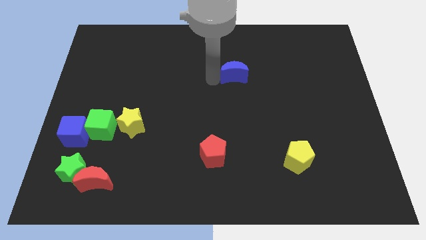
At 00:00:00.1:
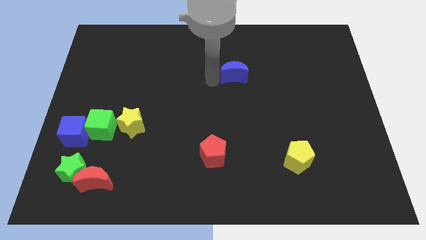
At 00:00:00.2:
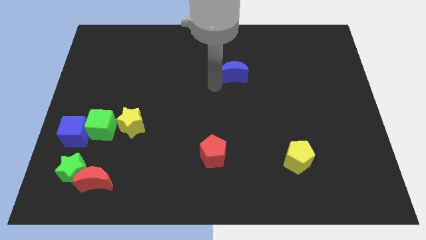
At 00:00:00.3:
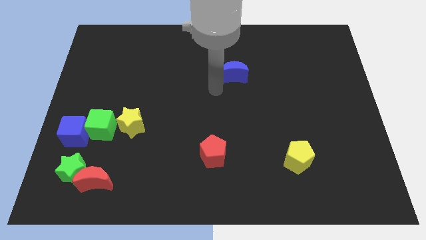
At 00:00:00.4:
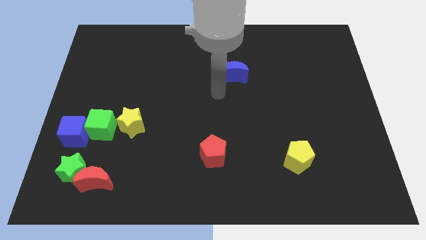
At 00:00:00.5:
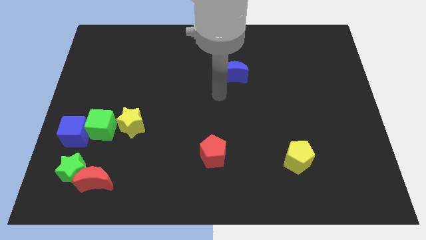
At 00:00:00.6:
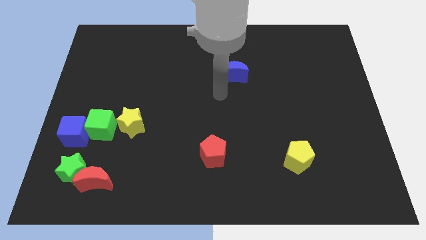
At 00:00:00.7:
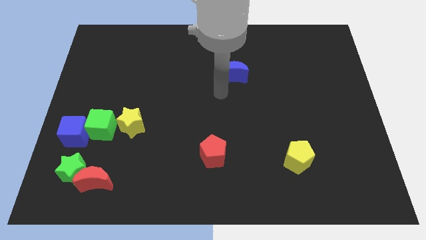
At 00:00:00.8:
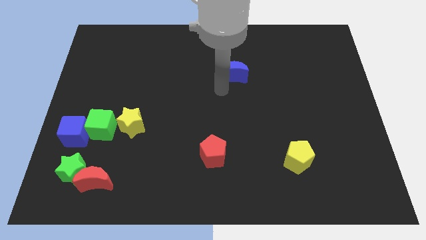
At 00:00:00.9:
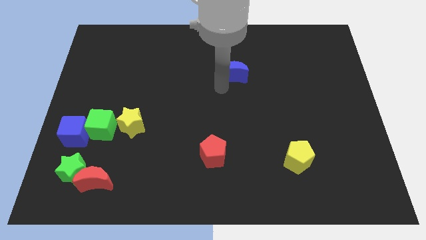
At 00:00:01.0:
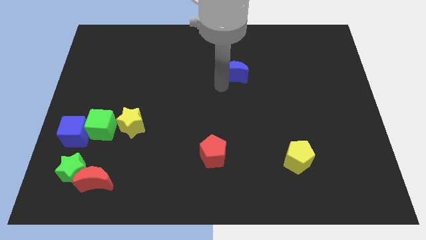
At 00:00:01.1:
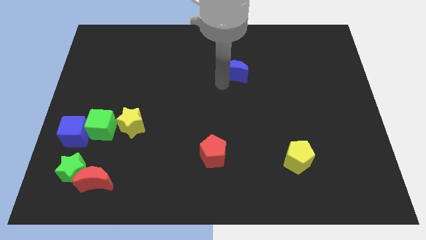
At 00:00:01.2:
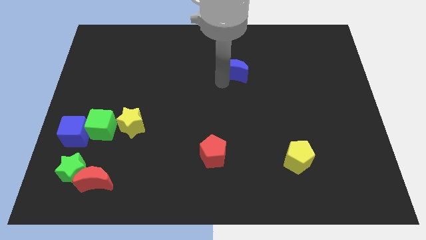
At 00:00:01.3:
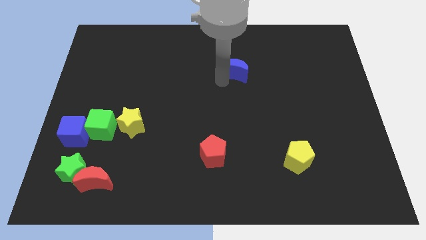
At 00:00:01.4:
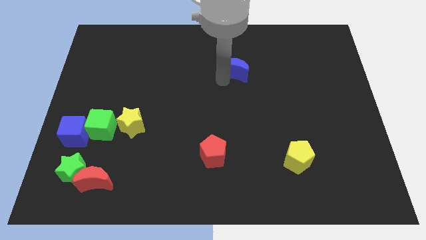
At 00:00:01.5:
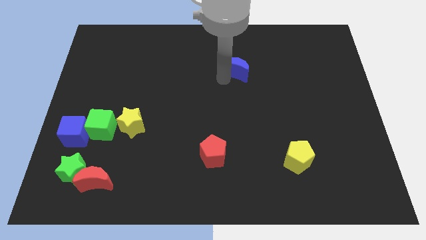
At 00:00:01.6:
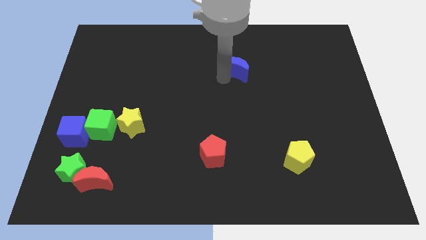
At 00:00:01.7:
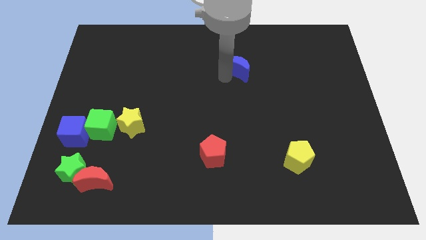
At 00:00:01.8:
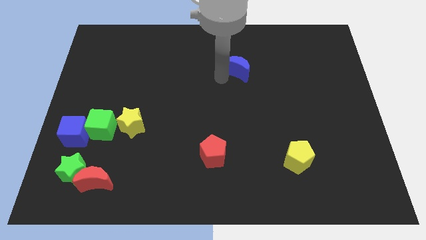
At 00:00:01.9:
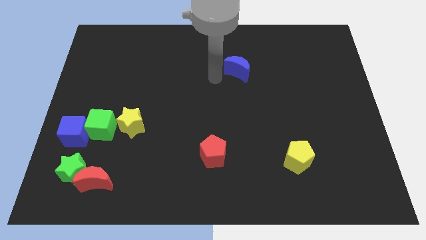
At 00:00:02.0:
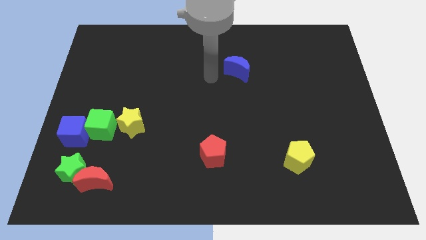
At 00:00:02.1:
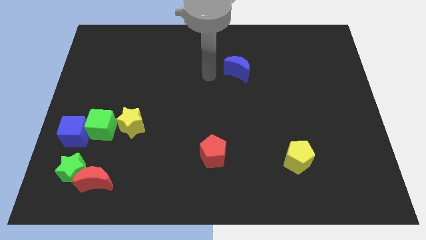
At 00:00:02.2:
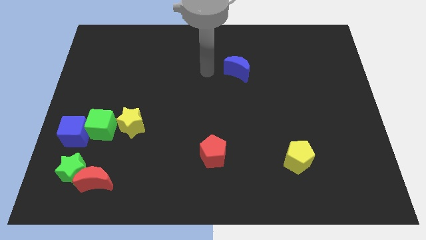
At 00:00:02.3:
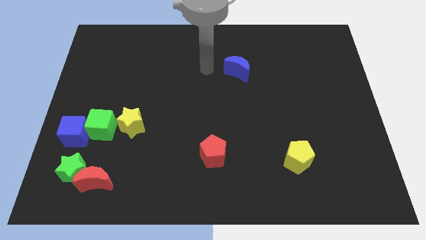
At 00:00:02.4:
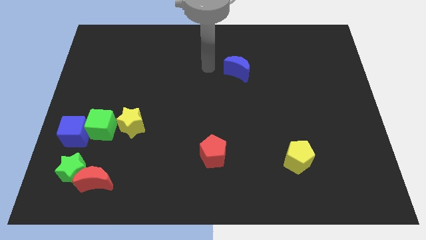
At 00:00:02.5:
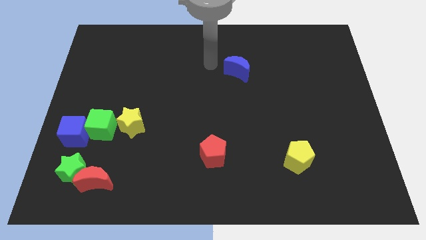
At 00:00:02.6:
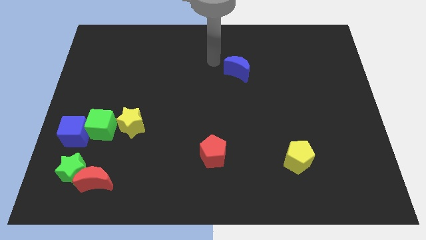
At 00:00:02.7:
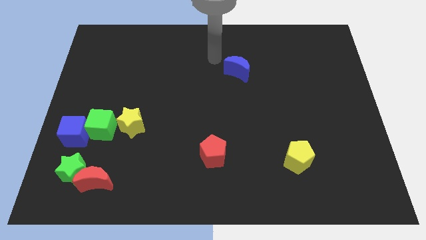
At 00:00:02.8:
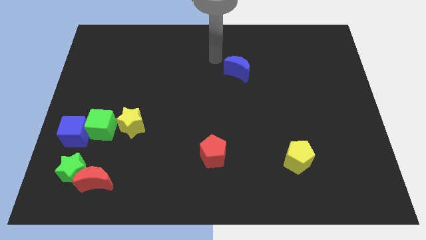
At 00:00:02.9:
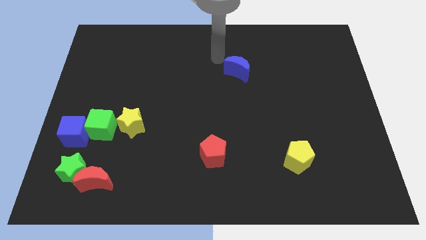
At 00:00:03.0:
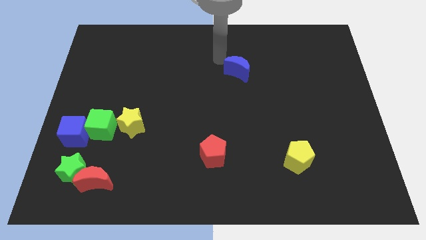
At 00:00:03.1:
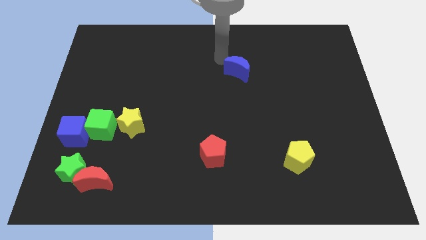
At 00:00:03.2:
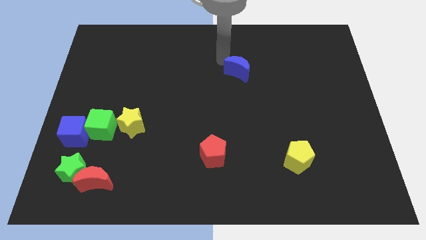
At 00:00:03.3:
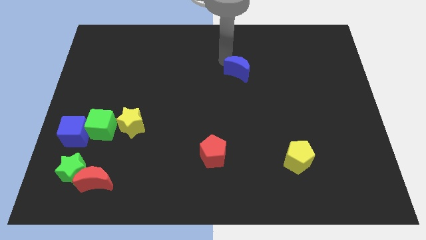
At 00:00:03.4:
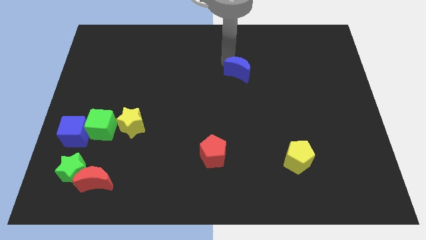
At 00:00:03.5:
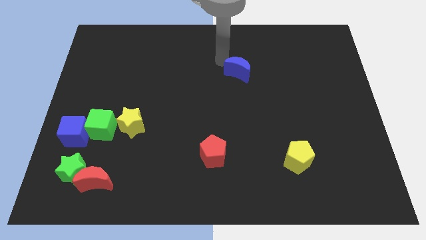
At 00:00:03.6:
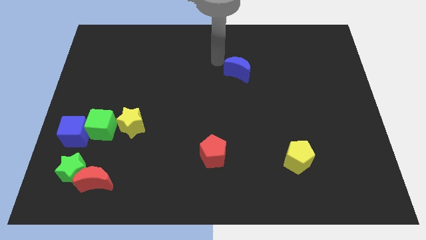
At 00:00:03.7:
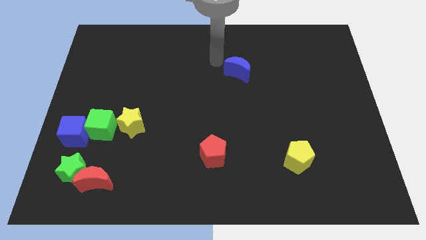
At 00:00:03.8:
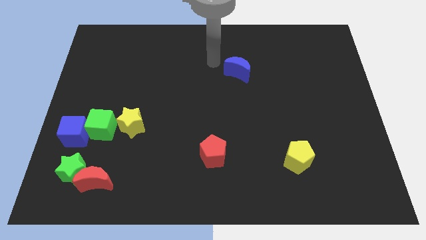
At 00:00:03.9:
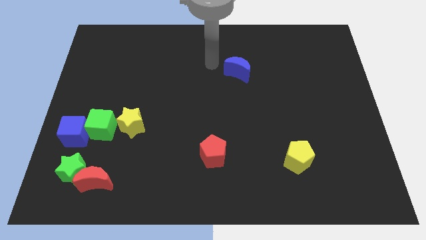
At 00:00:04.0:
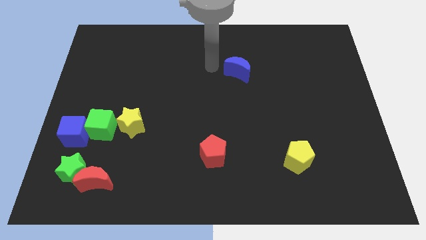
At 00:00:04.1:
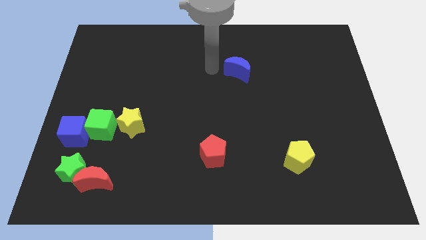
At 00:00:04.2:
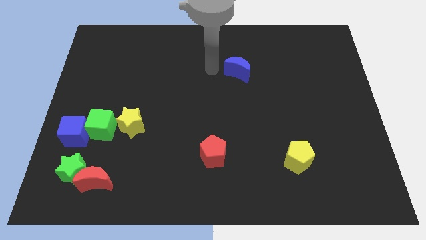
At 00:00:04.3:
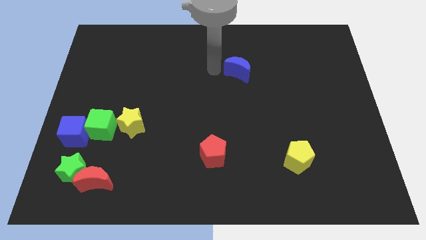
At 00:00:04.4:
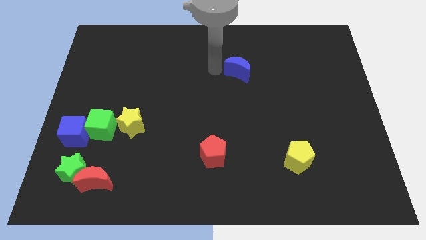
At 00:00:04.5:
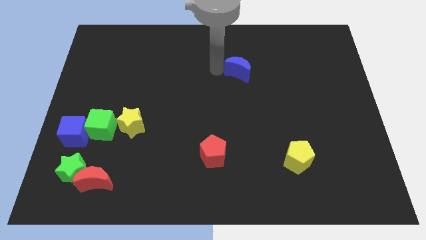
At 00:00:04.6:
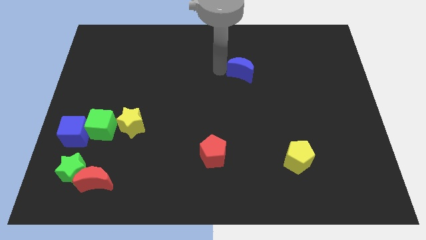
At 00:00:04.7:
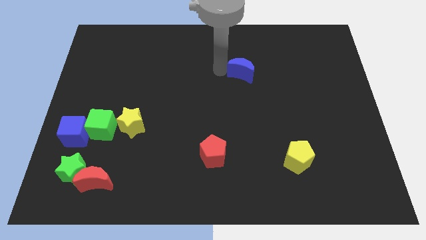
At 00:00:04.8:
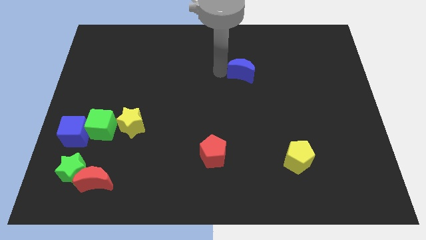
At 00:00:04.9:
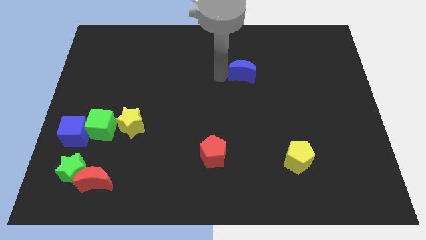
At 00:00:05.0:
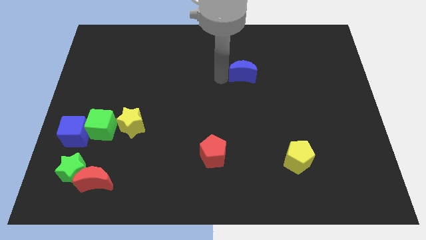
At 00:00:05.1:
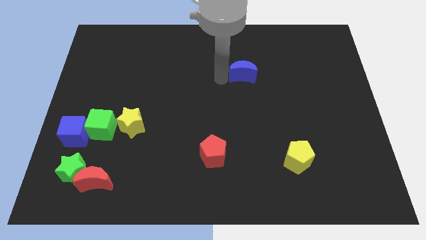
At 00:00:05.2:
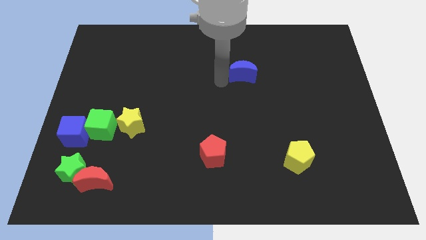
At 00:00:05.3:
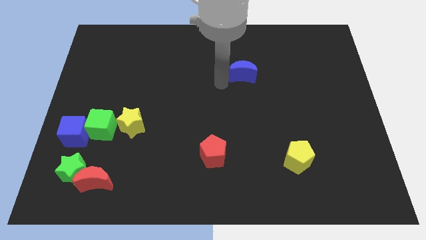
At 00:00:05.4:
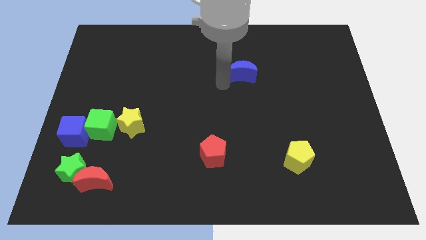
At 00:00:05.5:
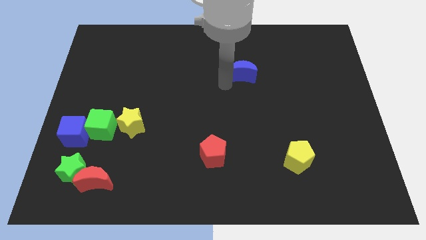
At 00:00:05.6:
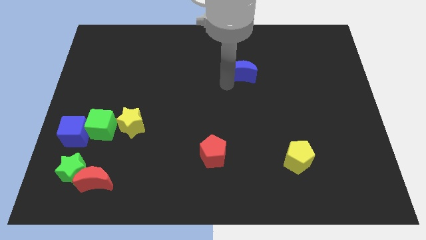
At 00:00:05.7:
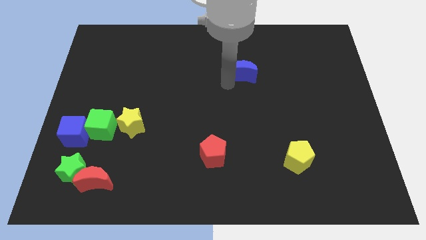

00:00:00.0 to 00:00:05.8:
place the blue crescent slightly towards the top right side of the board

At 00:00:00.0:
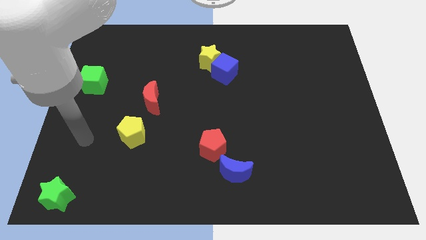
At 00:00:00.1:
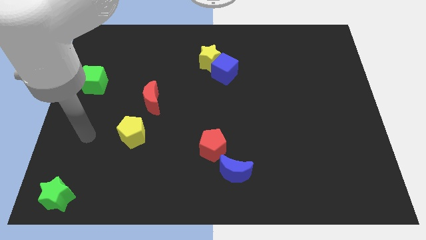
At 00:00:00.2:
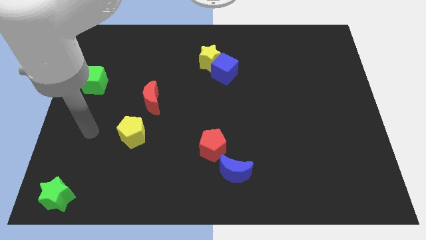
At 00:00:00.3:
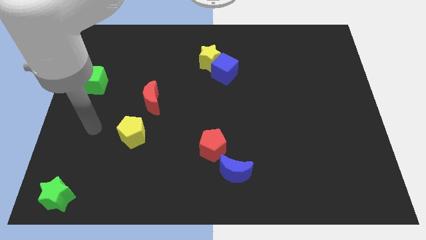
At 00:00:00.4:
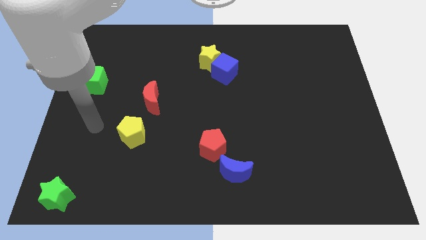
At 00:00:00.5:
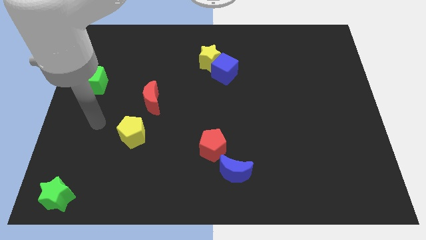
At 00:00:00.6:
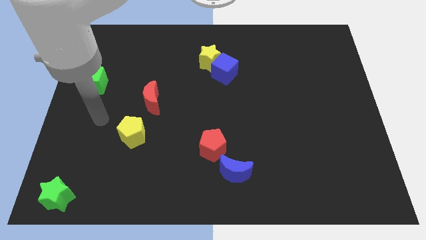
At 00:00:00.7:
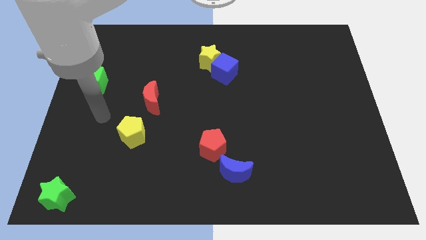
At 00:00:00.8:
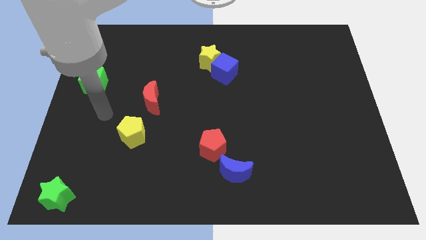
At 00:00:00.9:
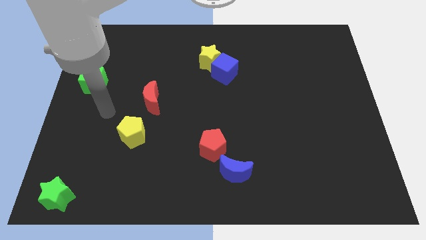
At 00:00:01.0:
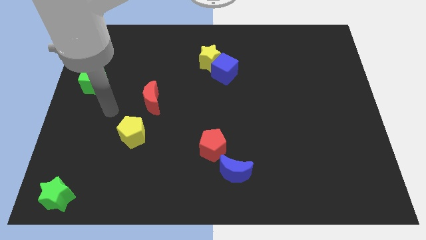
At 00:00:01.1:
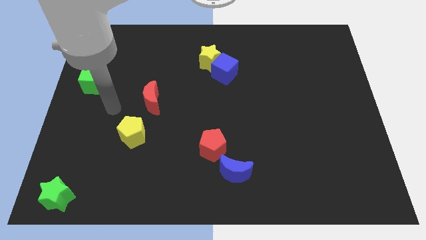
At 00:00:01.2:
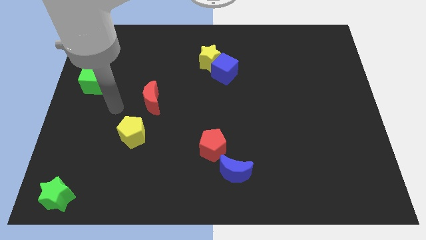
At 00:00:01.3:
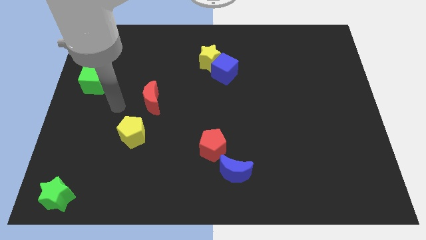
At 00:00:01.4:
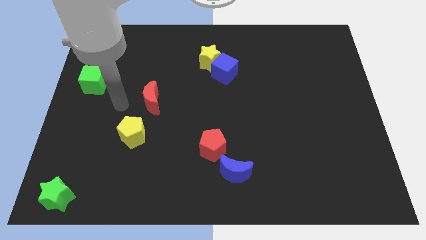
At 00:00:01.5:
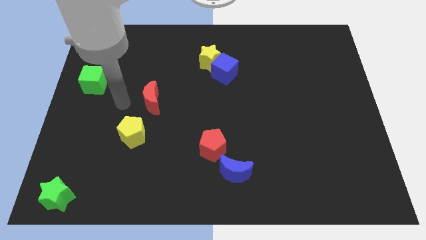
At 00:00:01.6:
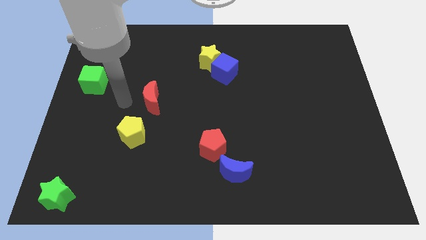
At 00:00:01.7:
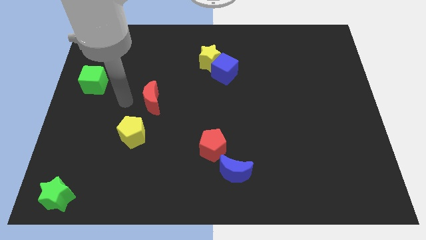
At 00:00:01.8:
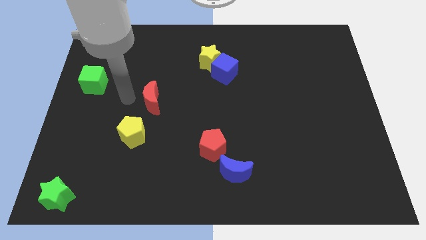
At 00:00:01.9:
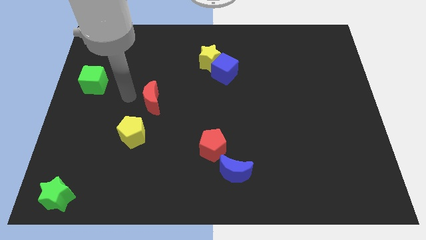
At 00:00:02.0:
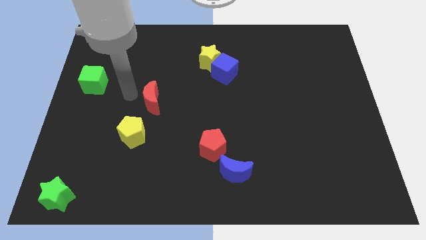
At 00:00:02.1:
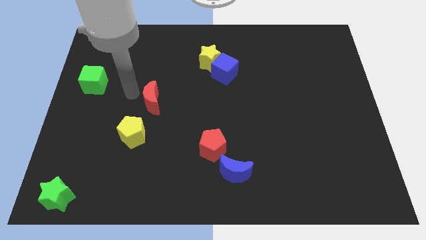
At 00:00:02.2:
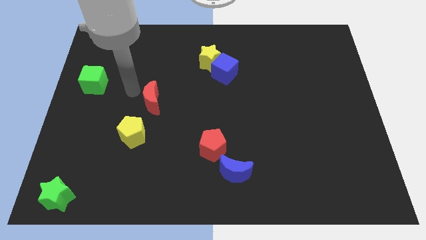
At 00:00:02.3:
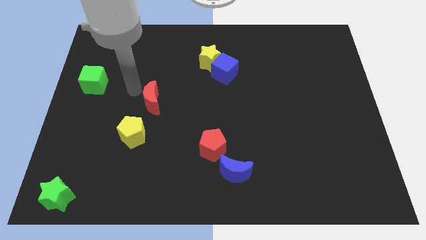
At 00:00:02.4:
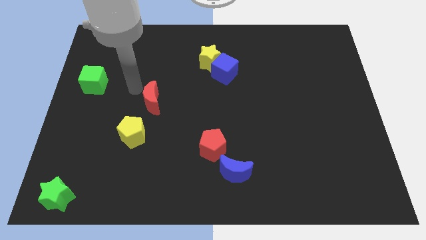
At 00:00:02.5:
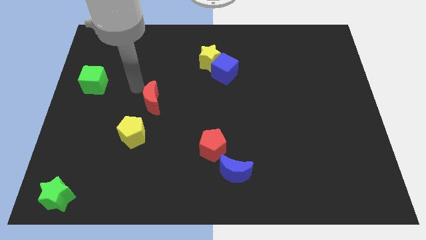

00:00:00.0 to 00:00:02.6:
place the arm at the left side of the red crescent

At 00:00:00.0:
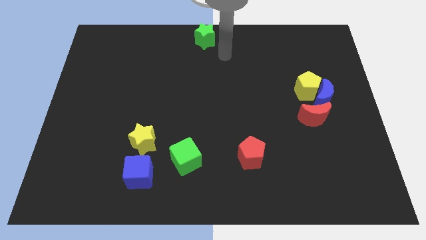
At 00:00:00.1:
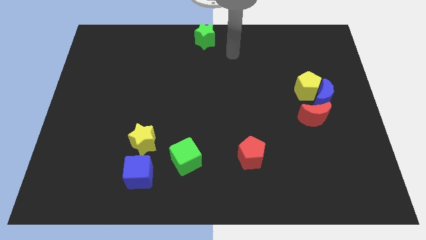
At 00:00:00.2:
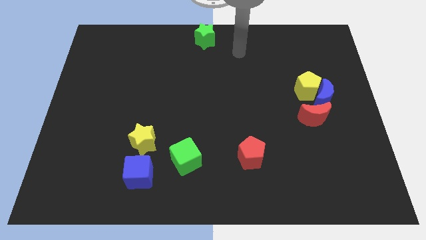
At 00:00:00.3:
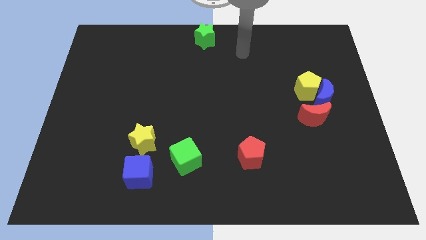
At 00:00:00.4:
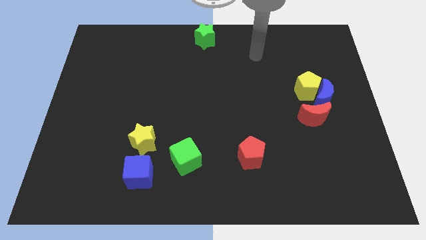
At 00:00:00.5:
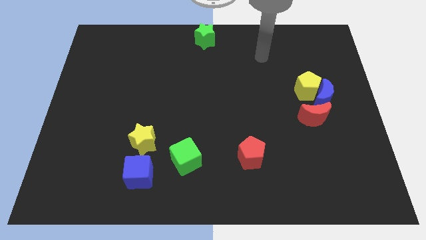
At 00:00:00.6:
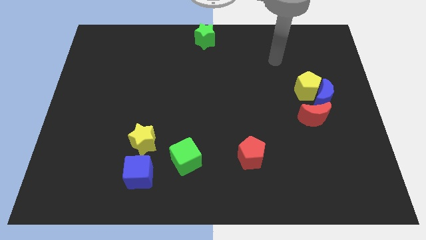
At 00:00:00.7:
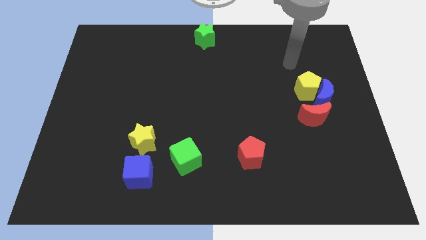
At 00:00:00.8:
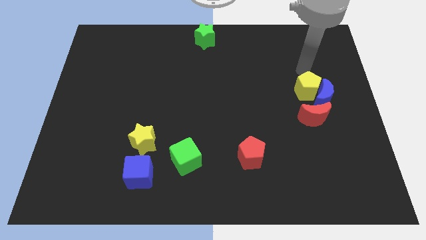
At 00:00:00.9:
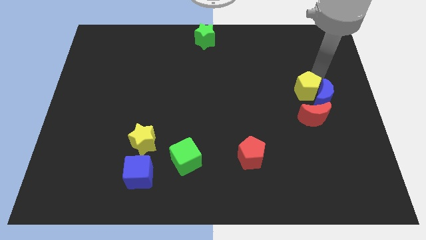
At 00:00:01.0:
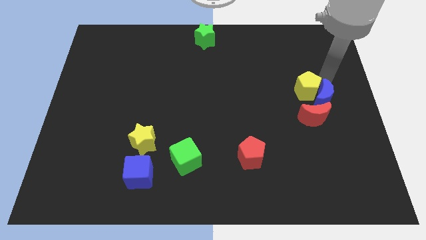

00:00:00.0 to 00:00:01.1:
point your arm at the top of the blue crescent
